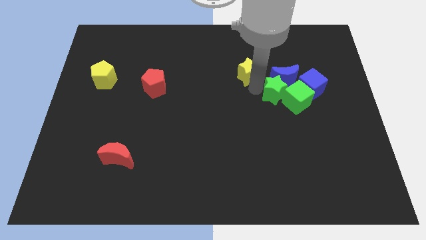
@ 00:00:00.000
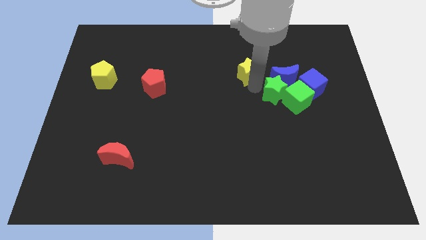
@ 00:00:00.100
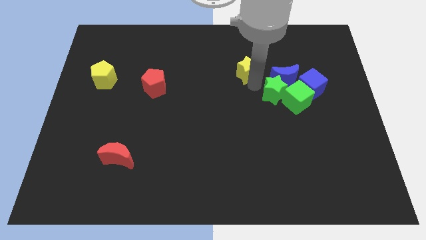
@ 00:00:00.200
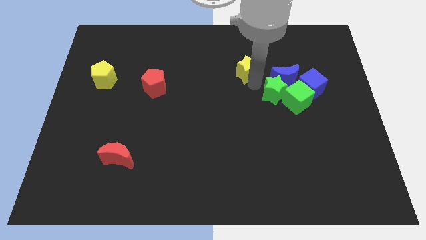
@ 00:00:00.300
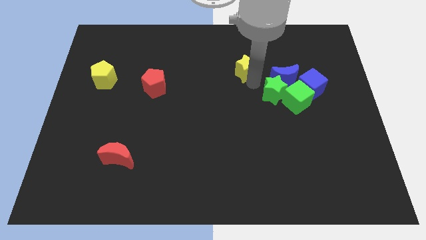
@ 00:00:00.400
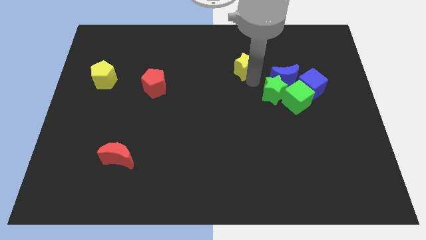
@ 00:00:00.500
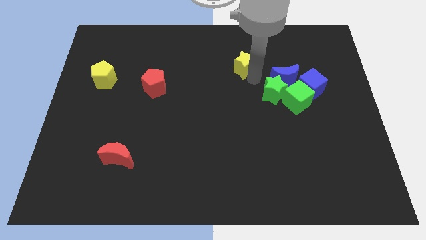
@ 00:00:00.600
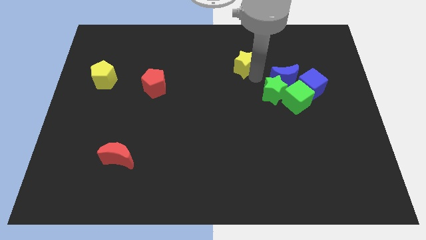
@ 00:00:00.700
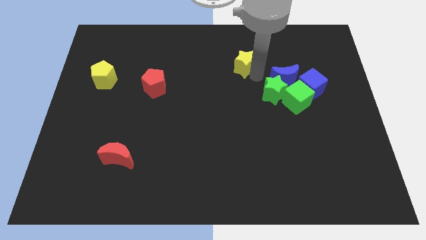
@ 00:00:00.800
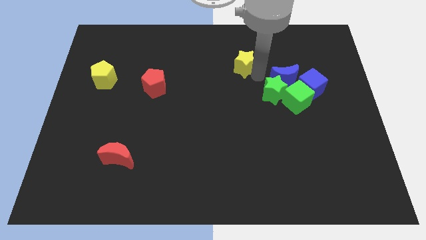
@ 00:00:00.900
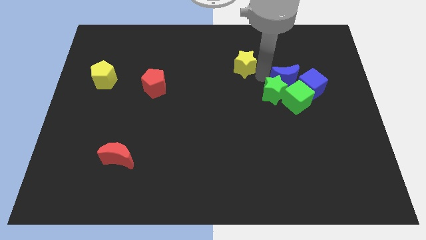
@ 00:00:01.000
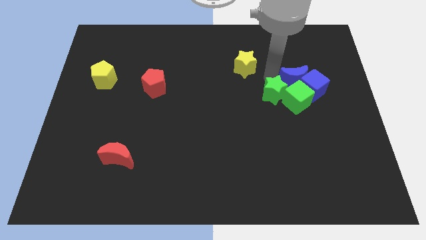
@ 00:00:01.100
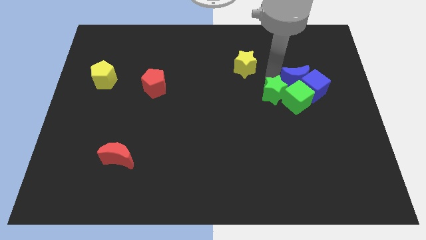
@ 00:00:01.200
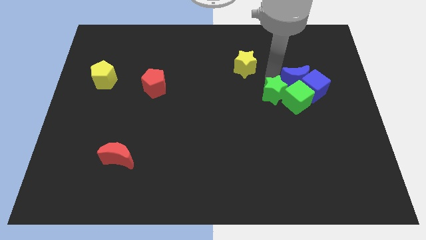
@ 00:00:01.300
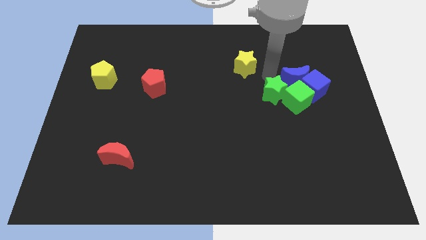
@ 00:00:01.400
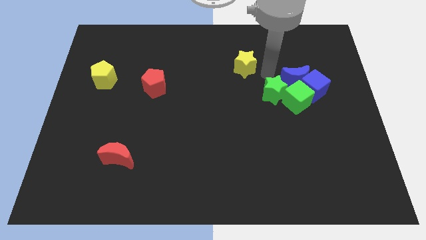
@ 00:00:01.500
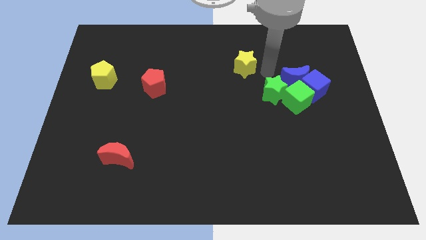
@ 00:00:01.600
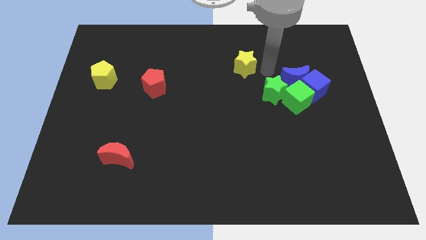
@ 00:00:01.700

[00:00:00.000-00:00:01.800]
place your arm in between the yellow star and blue moon

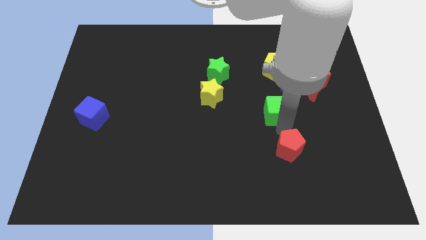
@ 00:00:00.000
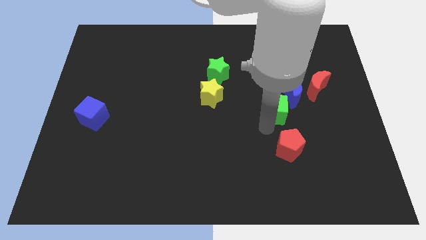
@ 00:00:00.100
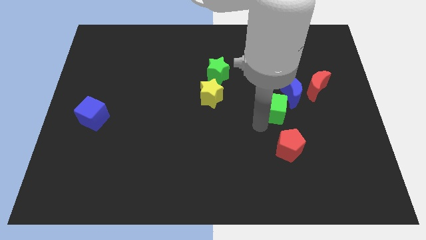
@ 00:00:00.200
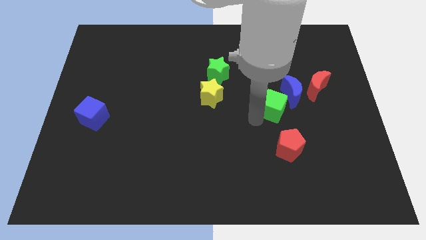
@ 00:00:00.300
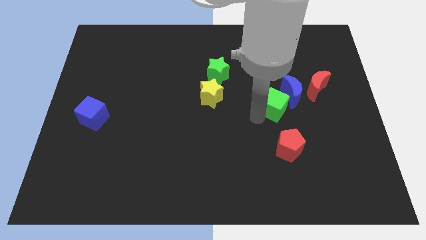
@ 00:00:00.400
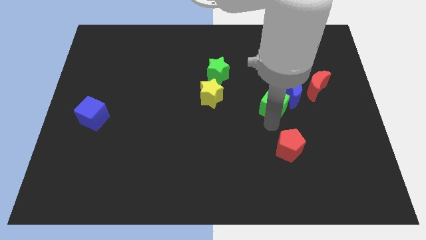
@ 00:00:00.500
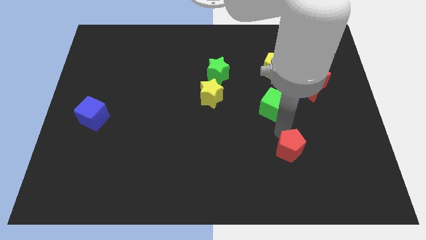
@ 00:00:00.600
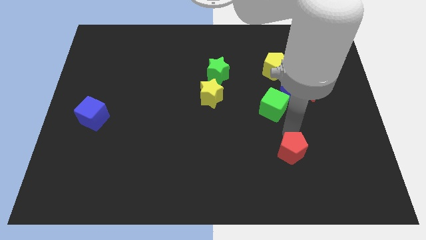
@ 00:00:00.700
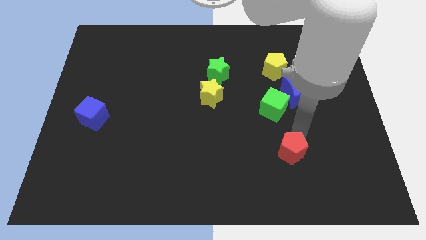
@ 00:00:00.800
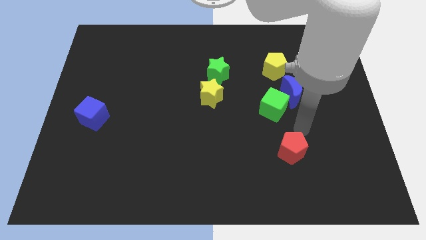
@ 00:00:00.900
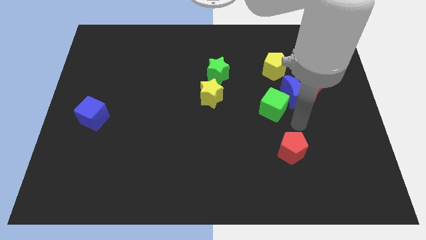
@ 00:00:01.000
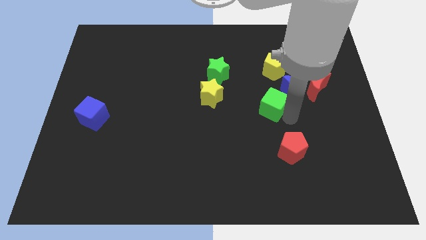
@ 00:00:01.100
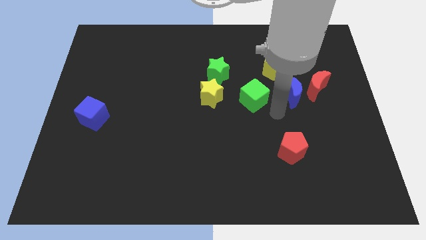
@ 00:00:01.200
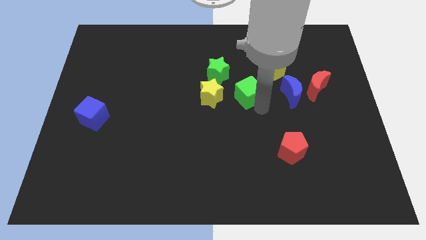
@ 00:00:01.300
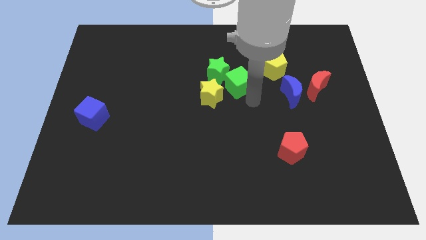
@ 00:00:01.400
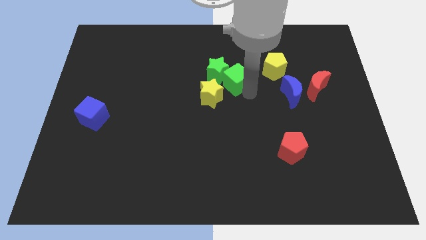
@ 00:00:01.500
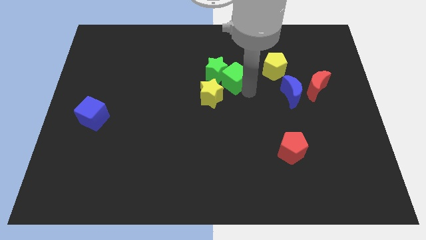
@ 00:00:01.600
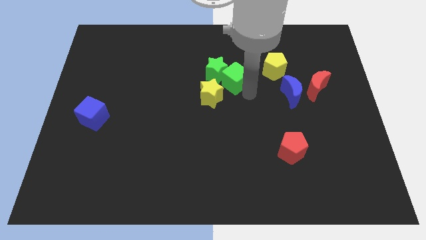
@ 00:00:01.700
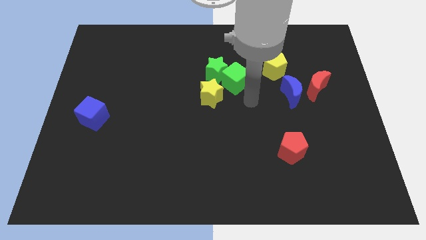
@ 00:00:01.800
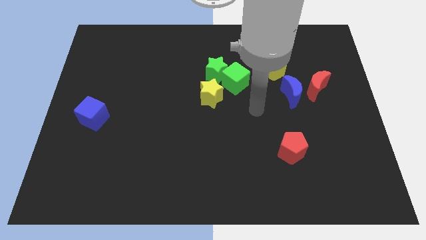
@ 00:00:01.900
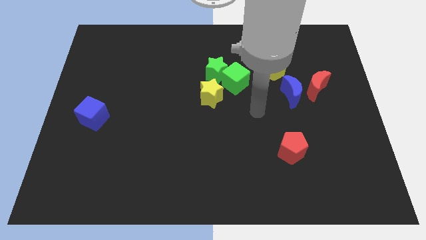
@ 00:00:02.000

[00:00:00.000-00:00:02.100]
place the green cube diagonally to red pentagon

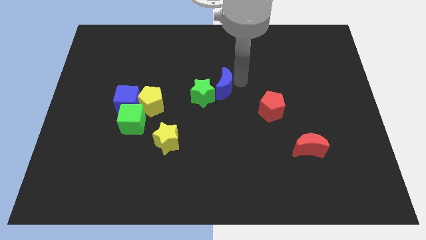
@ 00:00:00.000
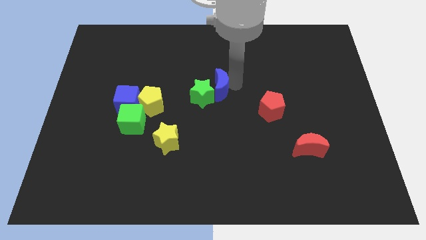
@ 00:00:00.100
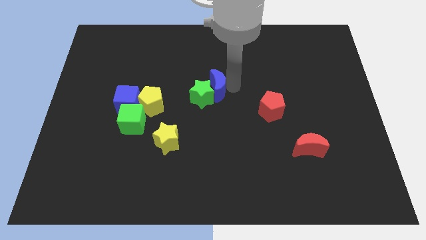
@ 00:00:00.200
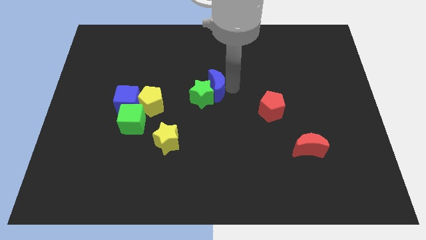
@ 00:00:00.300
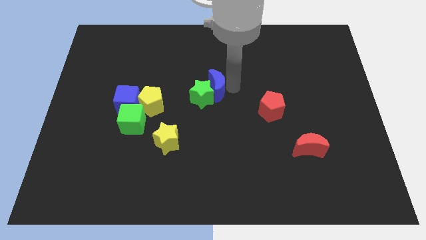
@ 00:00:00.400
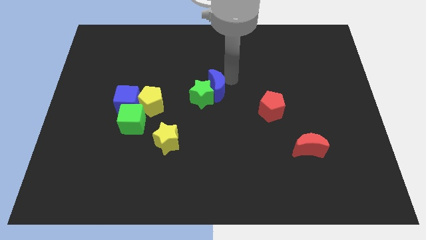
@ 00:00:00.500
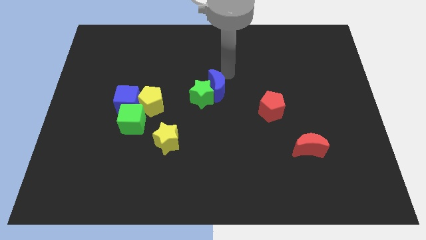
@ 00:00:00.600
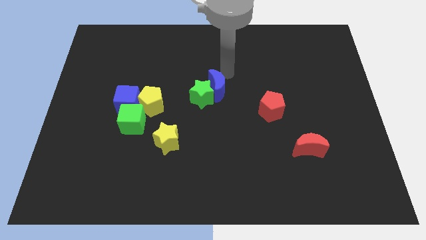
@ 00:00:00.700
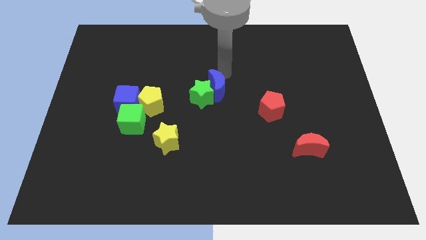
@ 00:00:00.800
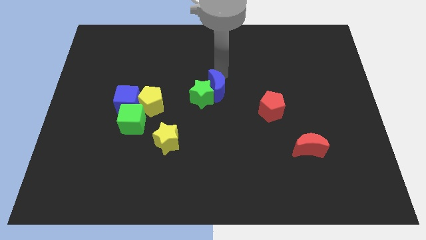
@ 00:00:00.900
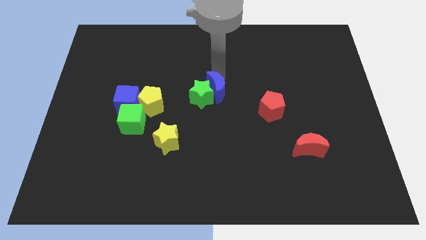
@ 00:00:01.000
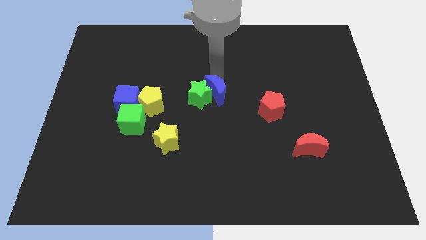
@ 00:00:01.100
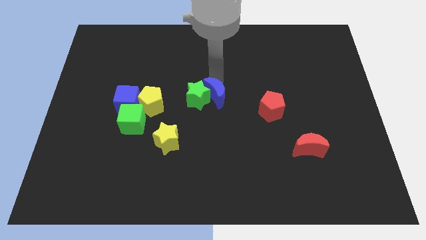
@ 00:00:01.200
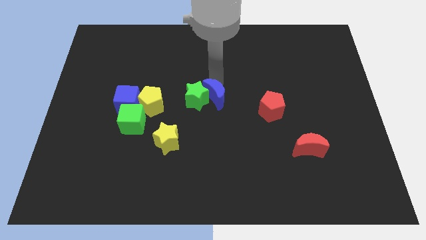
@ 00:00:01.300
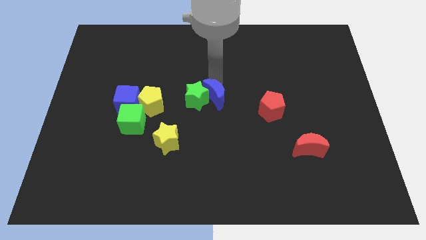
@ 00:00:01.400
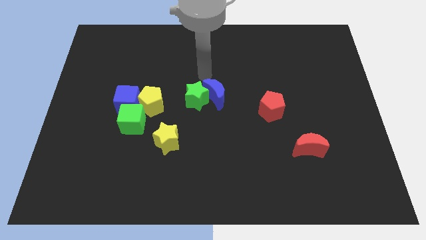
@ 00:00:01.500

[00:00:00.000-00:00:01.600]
push the blue crescent to the right of the green star

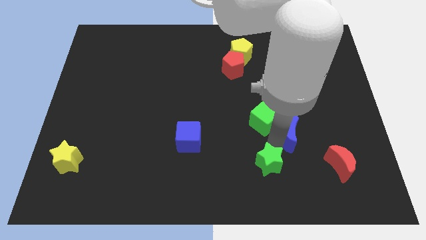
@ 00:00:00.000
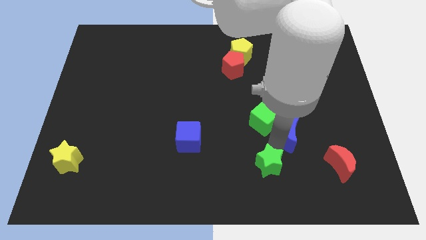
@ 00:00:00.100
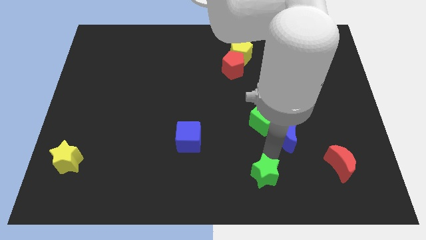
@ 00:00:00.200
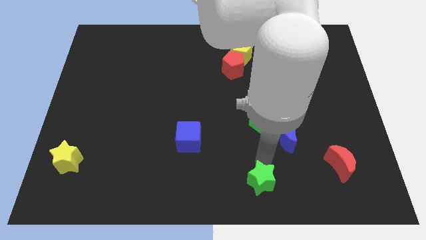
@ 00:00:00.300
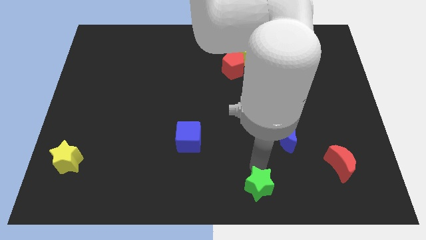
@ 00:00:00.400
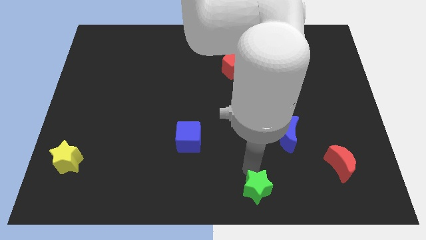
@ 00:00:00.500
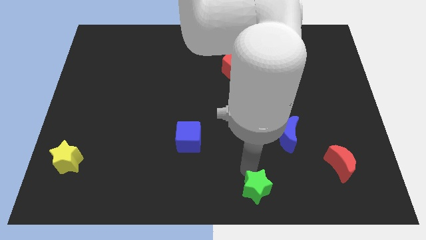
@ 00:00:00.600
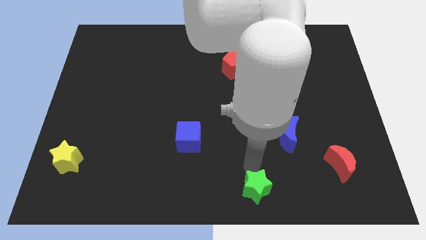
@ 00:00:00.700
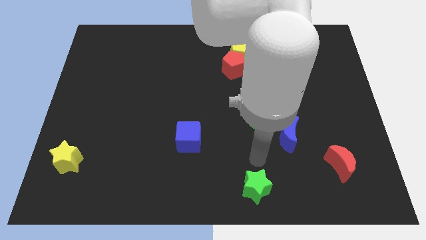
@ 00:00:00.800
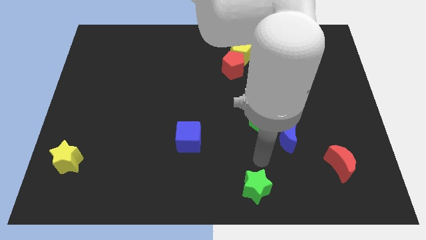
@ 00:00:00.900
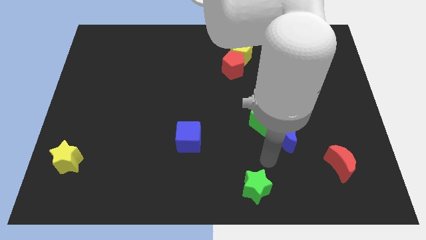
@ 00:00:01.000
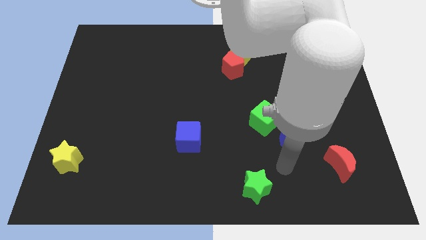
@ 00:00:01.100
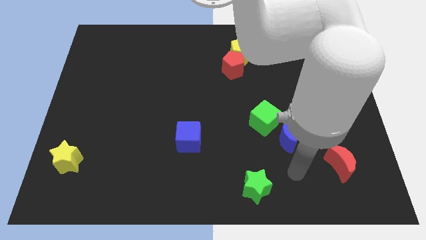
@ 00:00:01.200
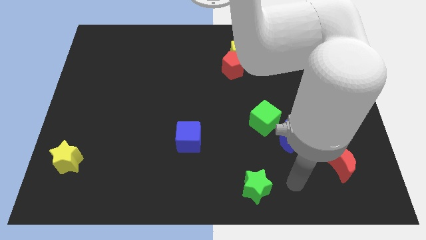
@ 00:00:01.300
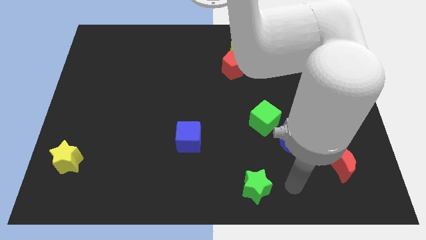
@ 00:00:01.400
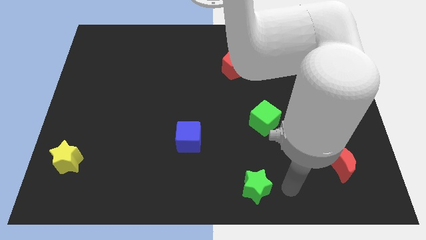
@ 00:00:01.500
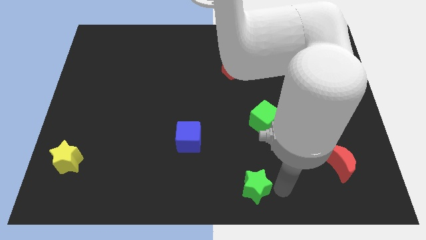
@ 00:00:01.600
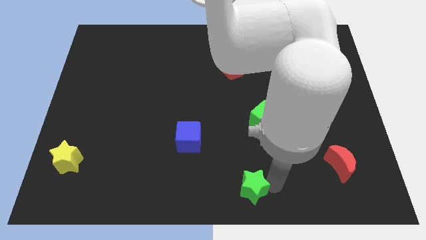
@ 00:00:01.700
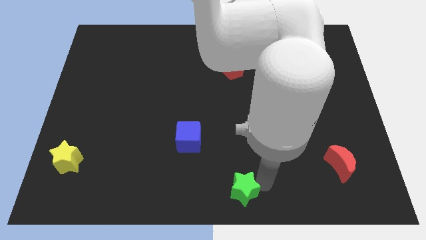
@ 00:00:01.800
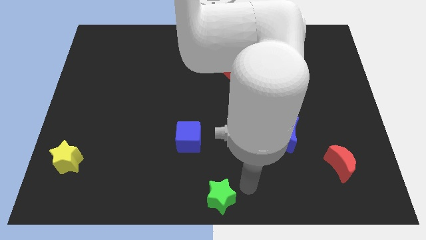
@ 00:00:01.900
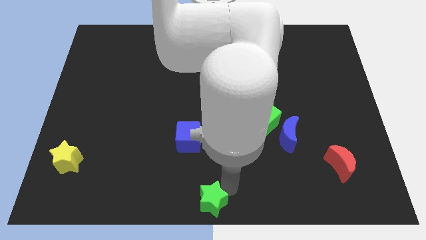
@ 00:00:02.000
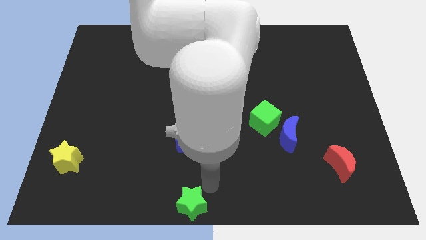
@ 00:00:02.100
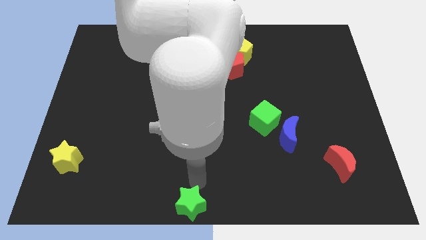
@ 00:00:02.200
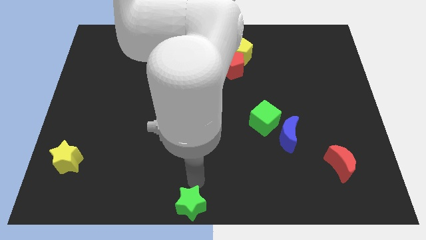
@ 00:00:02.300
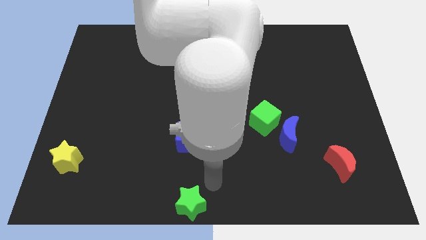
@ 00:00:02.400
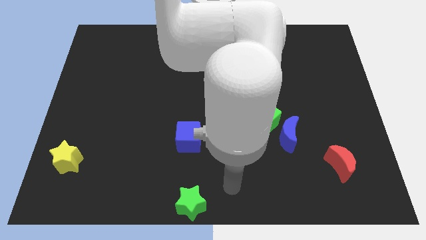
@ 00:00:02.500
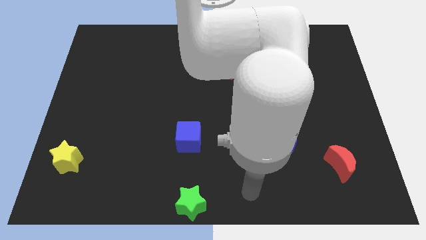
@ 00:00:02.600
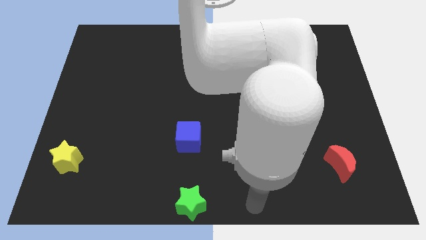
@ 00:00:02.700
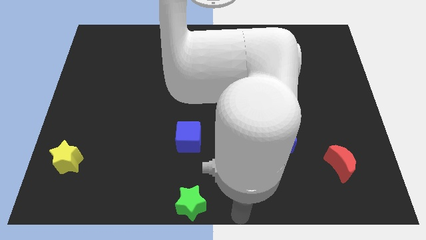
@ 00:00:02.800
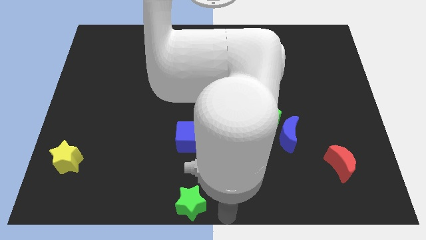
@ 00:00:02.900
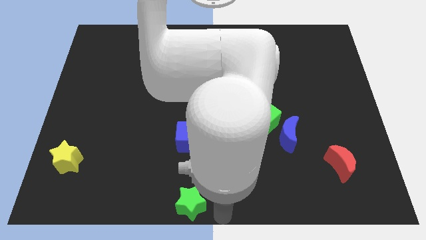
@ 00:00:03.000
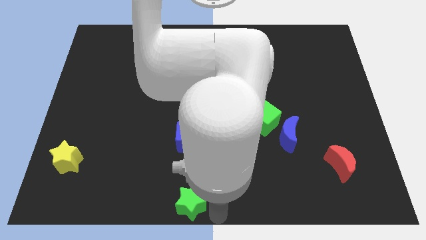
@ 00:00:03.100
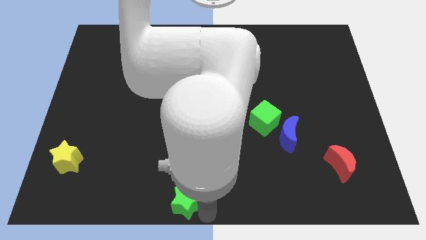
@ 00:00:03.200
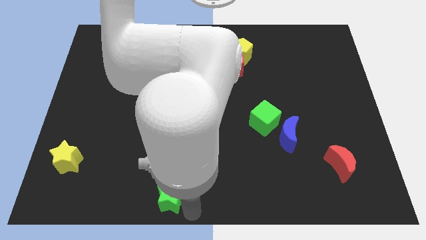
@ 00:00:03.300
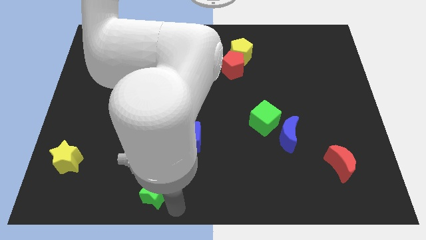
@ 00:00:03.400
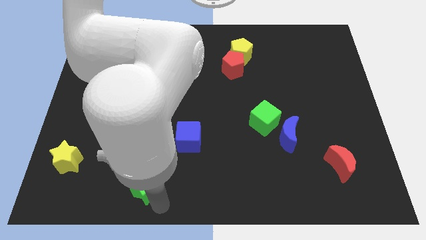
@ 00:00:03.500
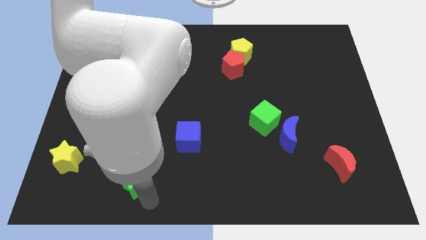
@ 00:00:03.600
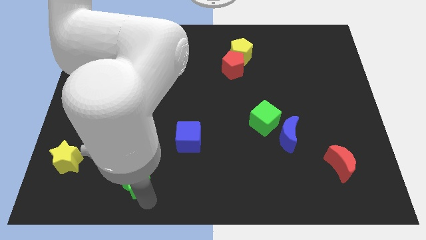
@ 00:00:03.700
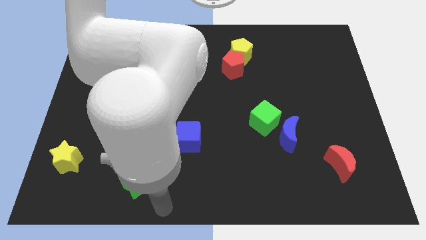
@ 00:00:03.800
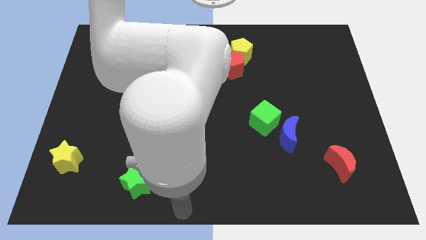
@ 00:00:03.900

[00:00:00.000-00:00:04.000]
push the green star diagonally to the blue cube
